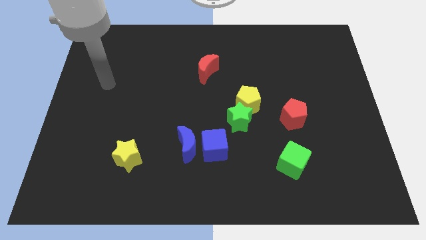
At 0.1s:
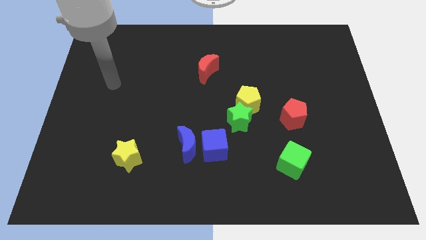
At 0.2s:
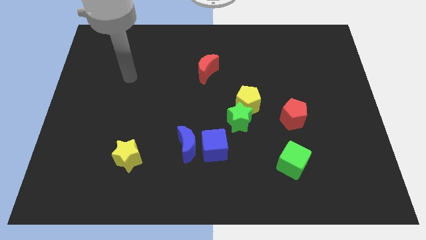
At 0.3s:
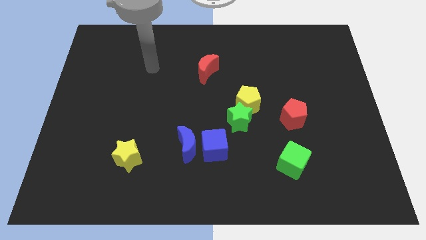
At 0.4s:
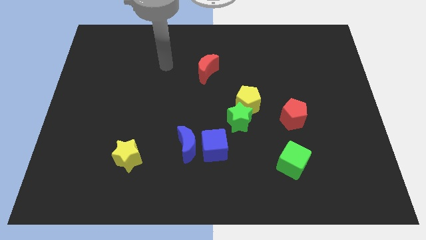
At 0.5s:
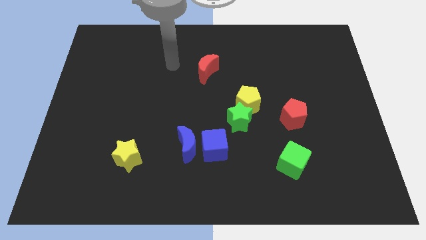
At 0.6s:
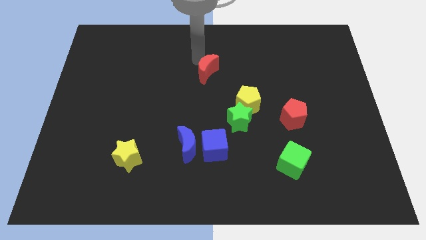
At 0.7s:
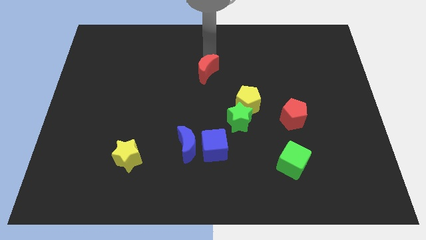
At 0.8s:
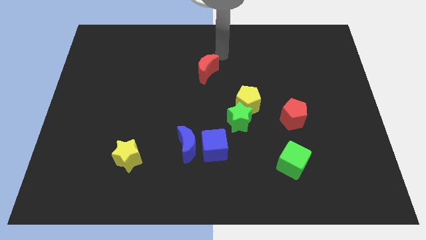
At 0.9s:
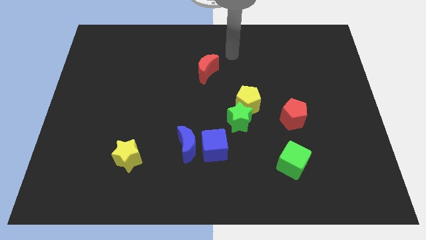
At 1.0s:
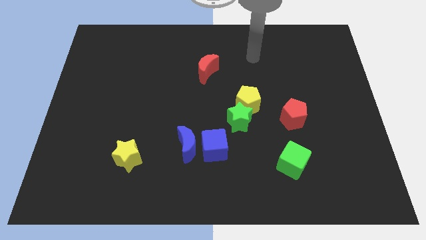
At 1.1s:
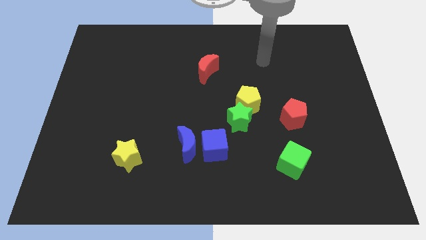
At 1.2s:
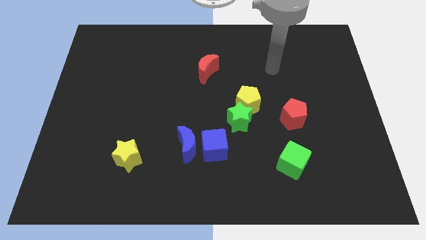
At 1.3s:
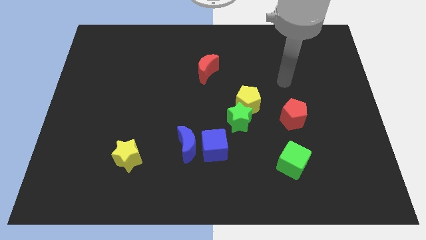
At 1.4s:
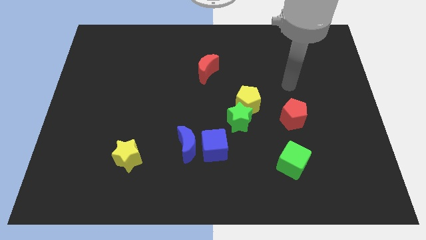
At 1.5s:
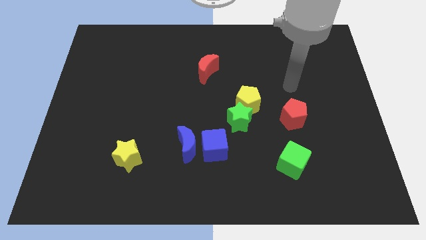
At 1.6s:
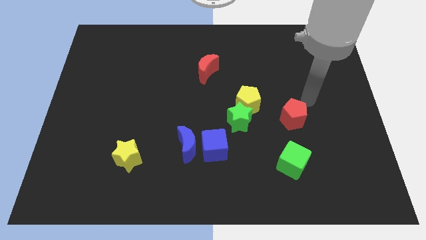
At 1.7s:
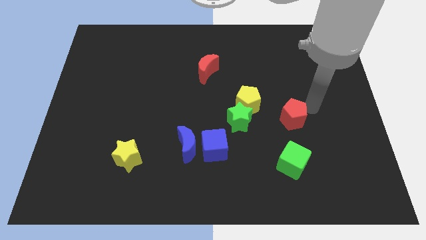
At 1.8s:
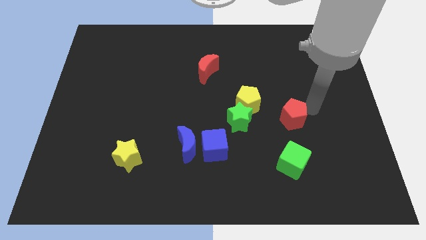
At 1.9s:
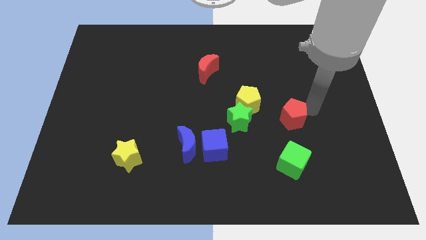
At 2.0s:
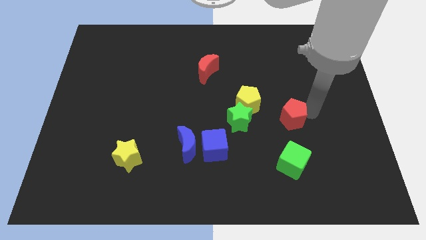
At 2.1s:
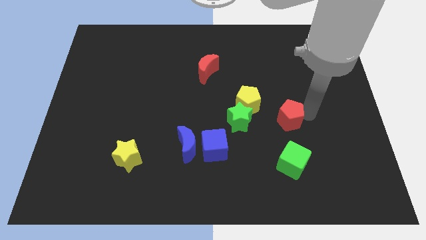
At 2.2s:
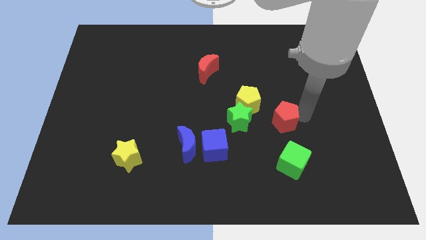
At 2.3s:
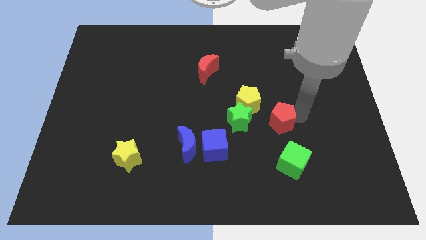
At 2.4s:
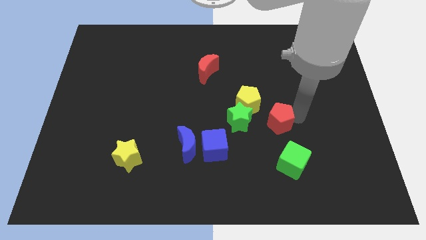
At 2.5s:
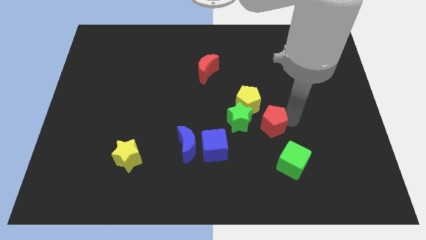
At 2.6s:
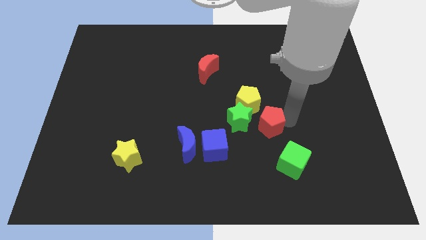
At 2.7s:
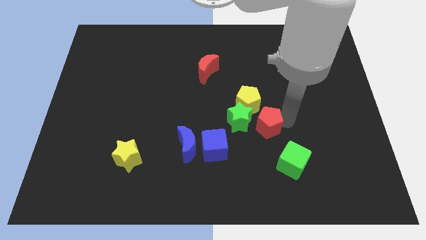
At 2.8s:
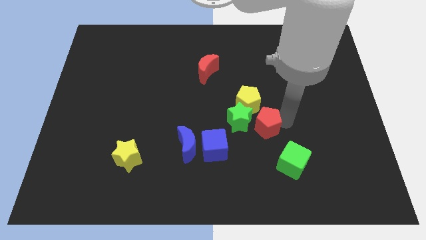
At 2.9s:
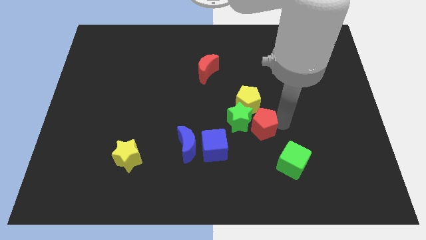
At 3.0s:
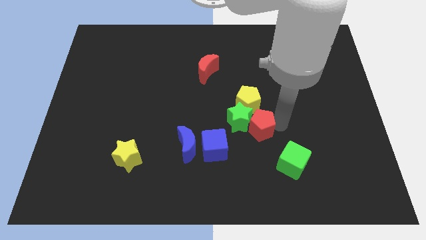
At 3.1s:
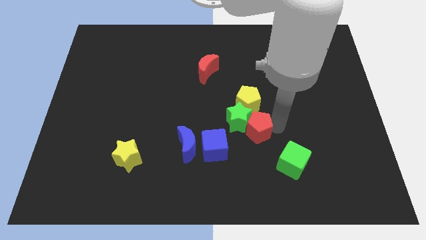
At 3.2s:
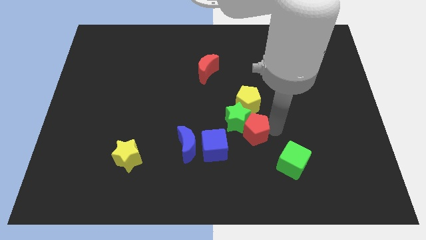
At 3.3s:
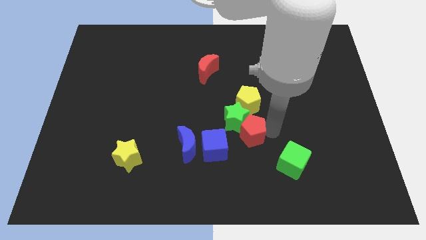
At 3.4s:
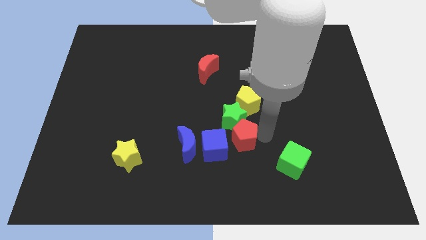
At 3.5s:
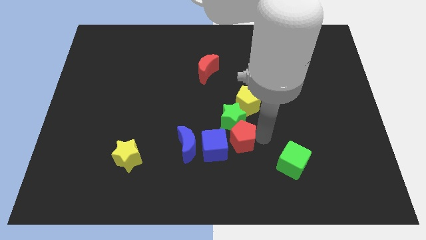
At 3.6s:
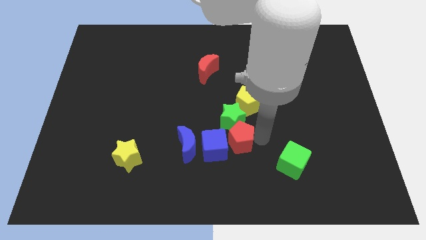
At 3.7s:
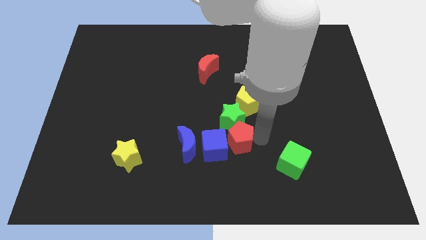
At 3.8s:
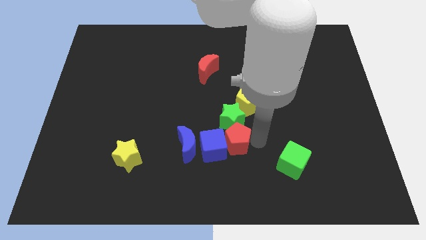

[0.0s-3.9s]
slide the red pentagon close to the blue cube

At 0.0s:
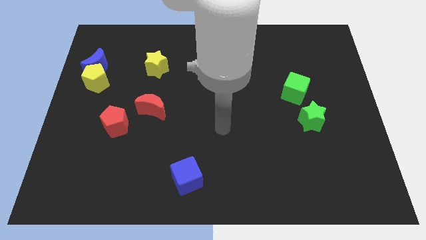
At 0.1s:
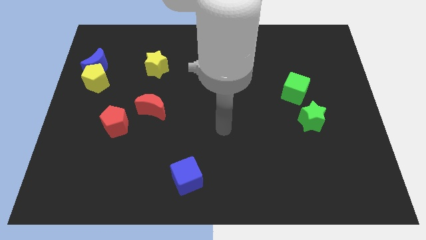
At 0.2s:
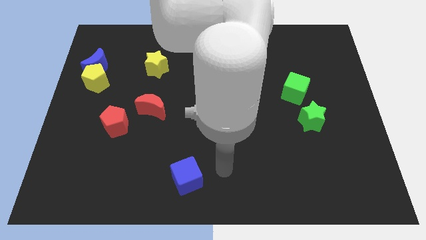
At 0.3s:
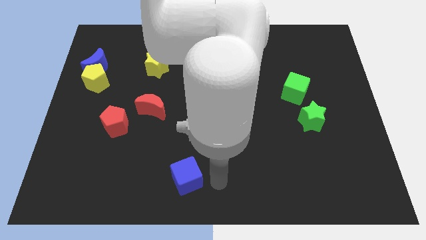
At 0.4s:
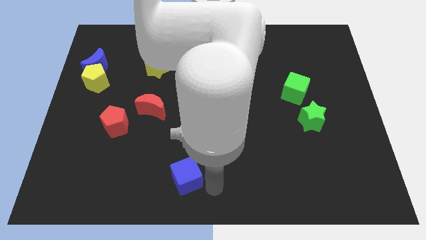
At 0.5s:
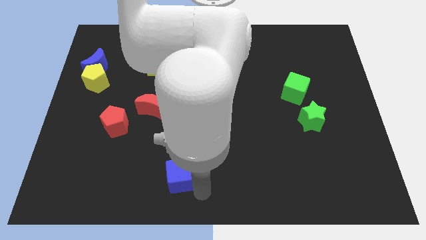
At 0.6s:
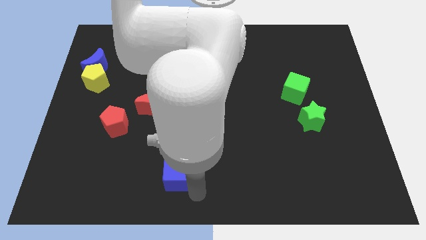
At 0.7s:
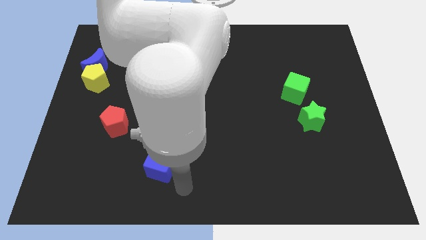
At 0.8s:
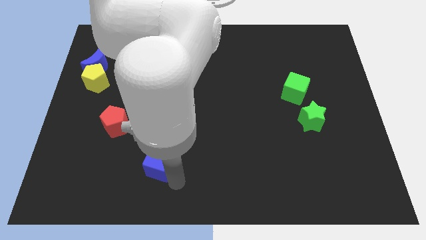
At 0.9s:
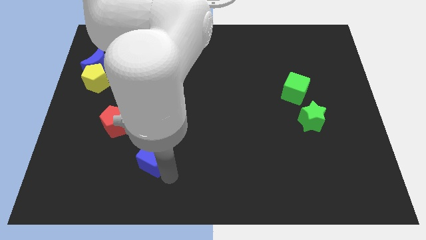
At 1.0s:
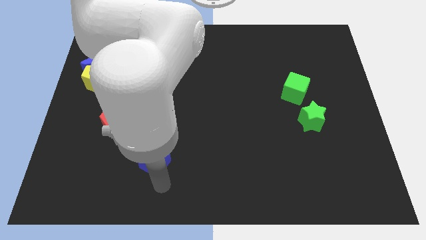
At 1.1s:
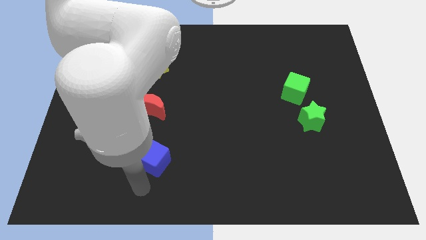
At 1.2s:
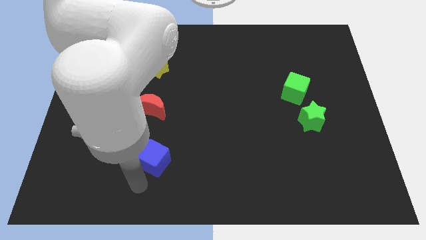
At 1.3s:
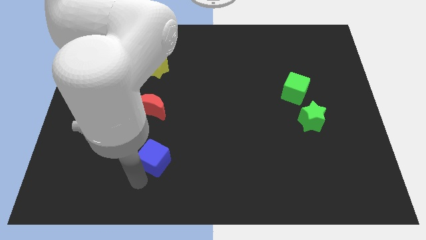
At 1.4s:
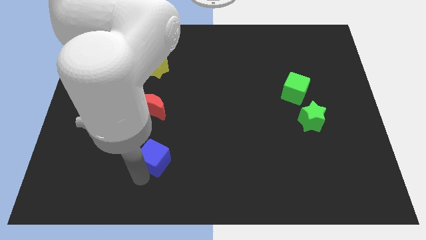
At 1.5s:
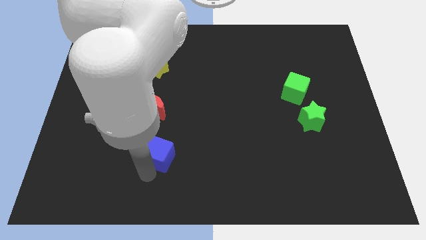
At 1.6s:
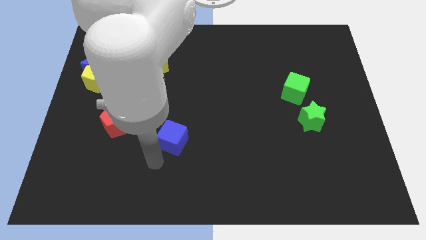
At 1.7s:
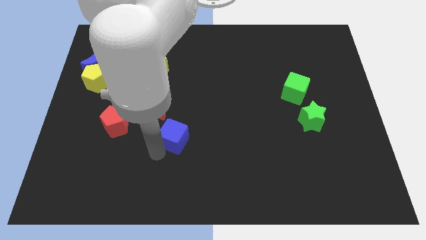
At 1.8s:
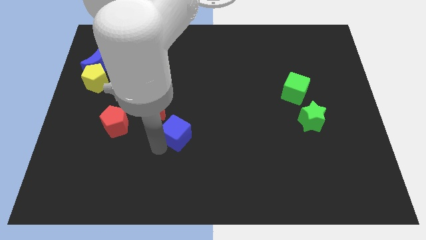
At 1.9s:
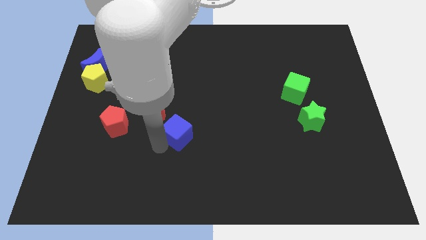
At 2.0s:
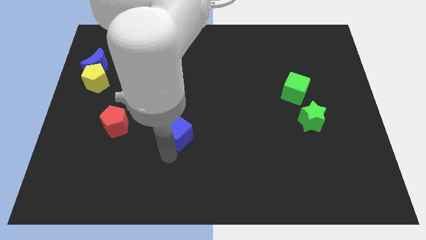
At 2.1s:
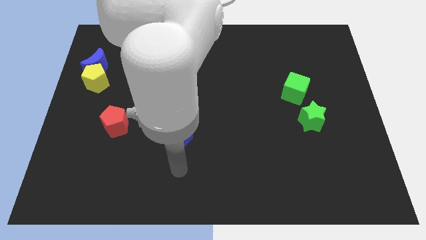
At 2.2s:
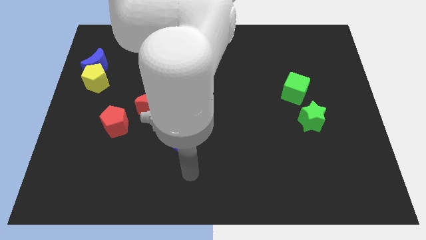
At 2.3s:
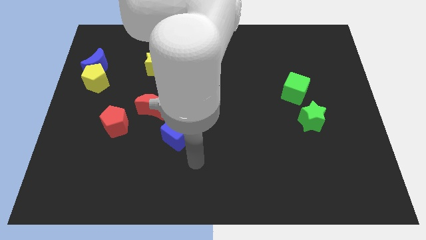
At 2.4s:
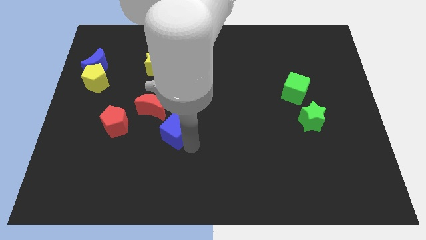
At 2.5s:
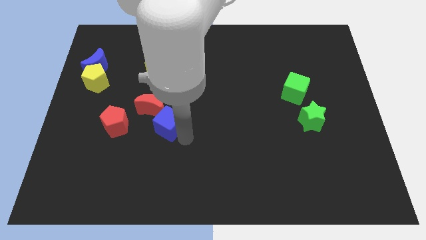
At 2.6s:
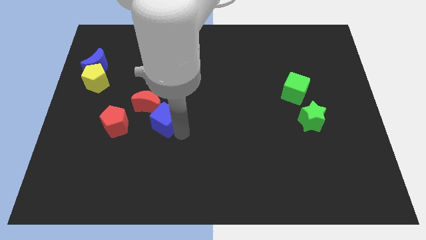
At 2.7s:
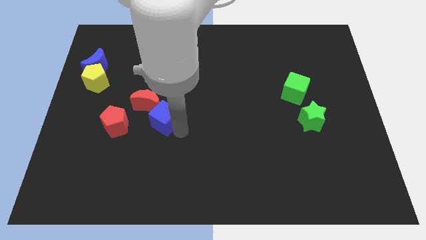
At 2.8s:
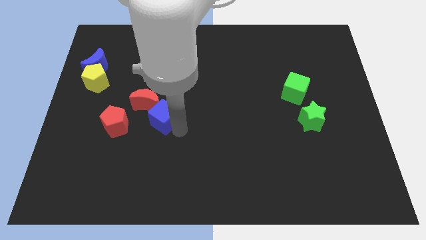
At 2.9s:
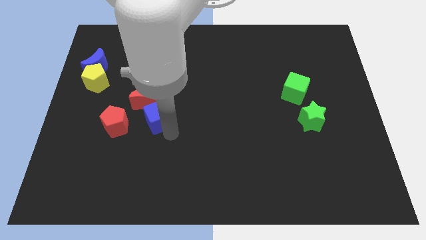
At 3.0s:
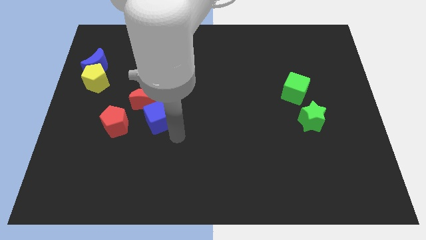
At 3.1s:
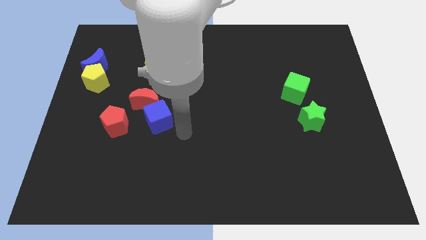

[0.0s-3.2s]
put the blue cube to the red moon

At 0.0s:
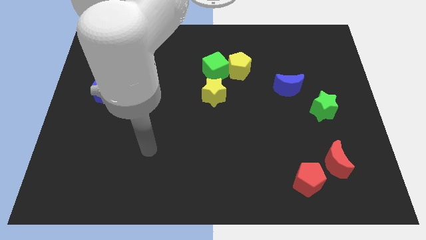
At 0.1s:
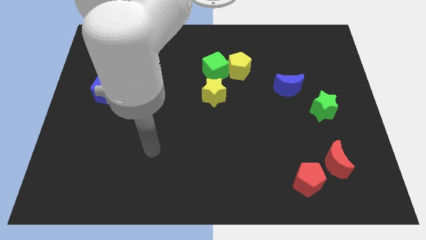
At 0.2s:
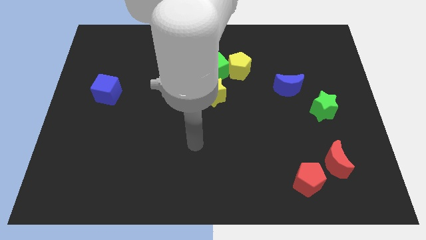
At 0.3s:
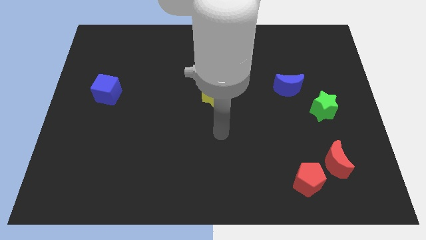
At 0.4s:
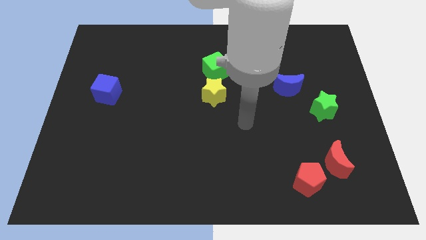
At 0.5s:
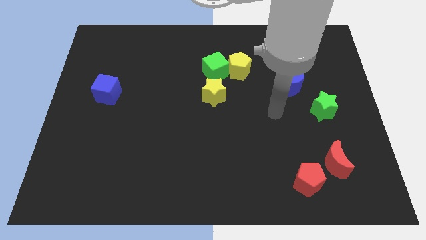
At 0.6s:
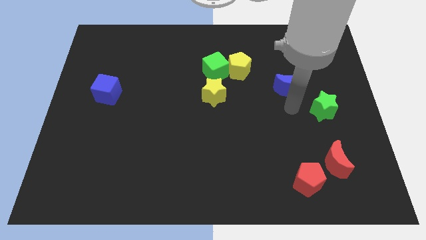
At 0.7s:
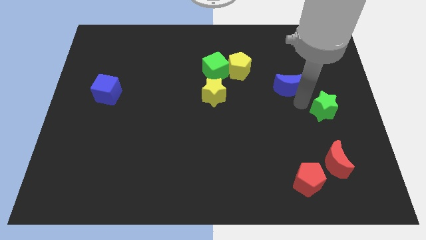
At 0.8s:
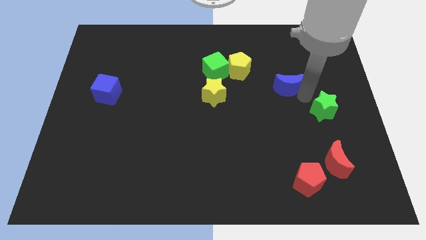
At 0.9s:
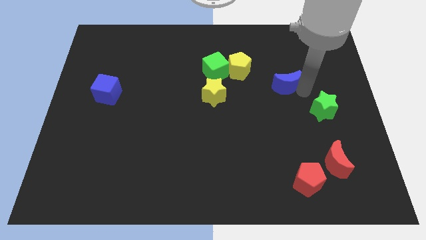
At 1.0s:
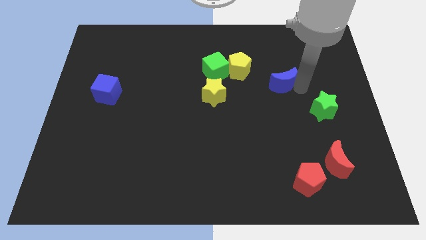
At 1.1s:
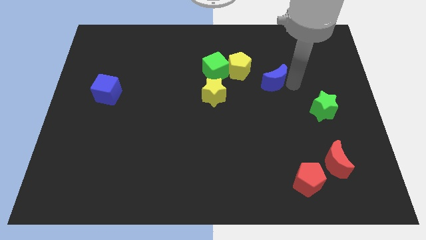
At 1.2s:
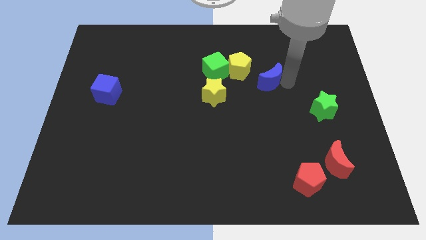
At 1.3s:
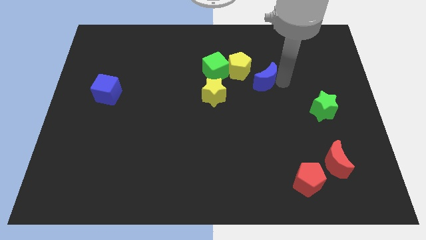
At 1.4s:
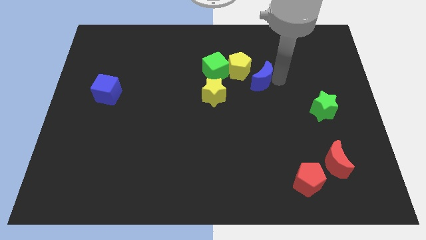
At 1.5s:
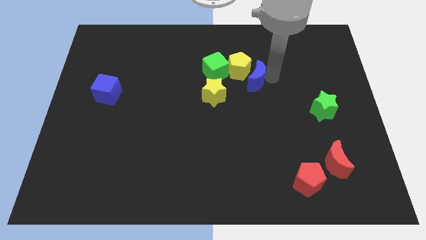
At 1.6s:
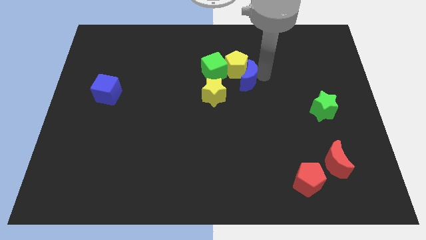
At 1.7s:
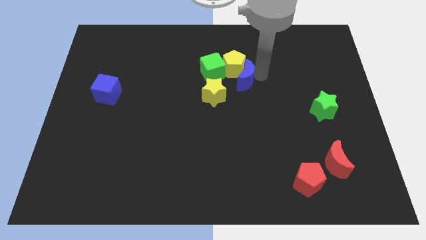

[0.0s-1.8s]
push the blue moon close to the yellow pentagon
